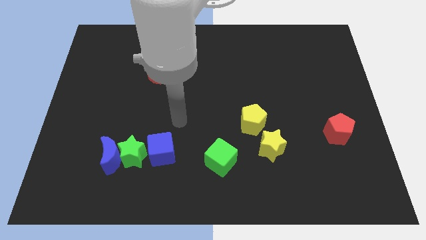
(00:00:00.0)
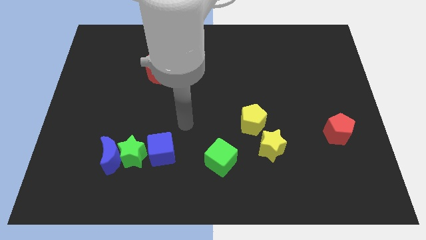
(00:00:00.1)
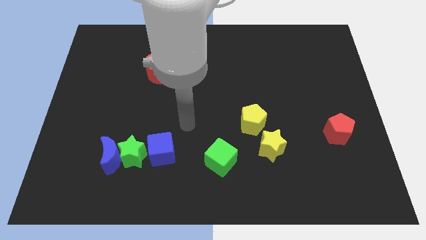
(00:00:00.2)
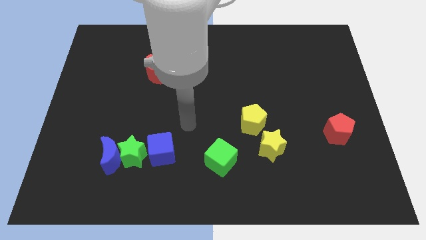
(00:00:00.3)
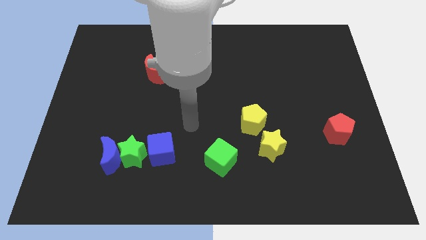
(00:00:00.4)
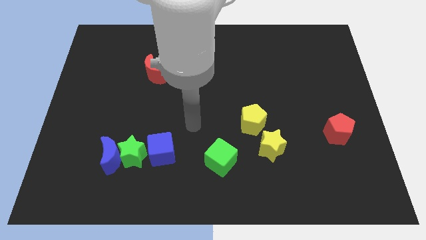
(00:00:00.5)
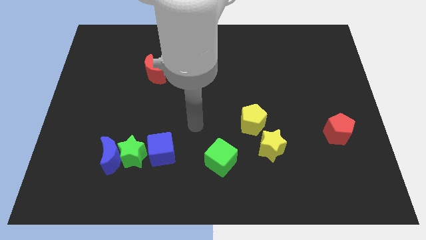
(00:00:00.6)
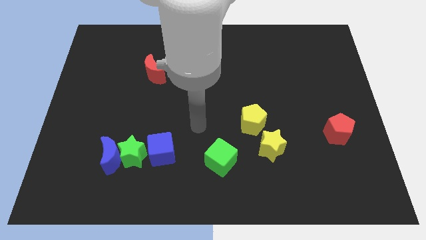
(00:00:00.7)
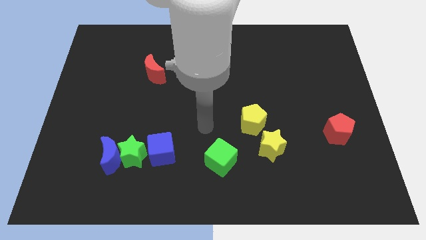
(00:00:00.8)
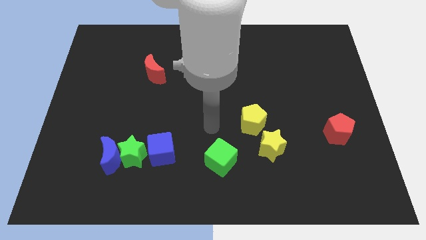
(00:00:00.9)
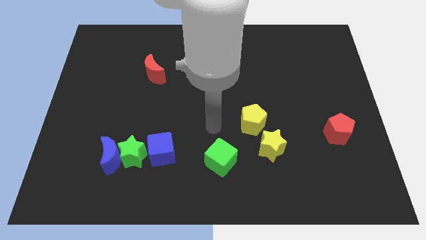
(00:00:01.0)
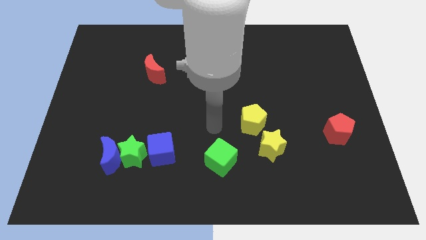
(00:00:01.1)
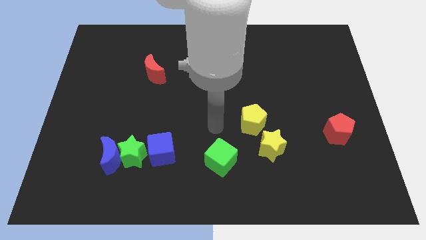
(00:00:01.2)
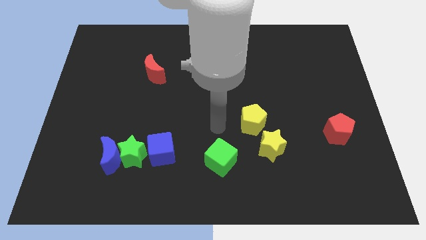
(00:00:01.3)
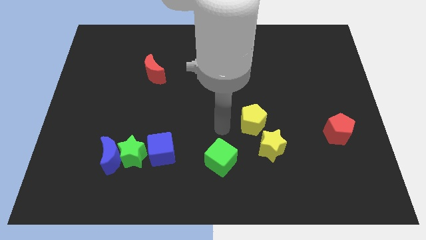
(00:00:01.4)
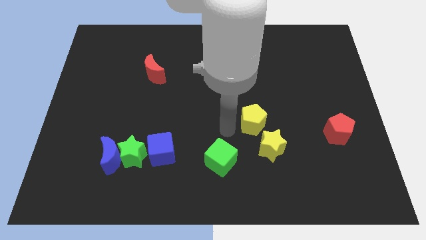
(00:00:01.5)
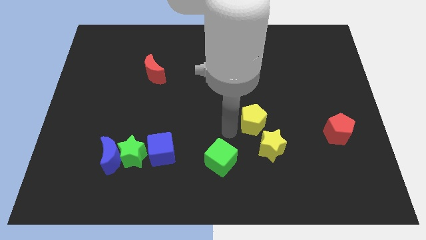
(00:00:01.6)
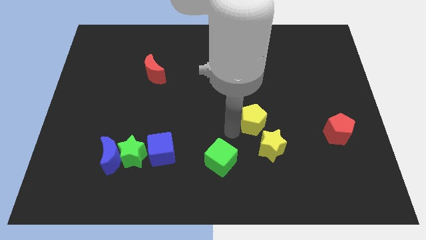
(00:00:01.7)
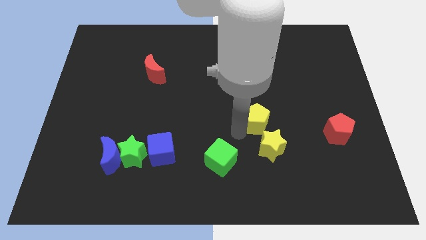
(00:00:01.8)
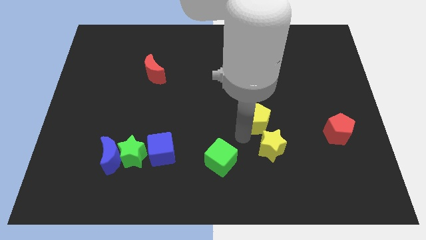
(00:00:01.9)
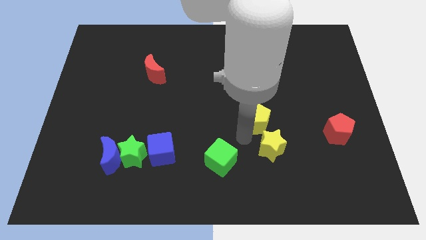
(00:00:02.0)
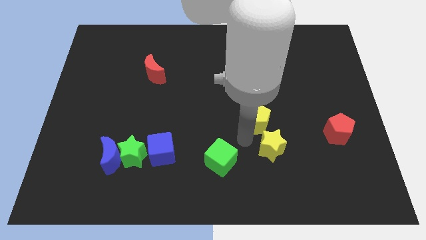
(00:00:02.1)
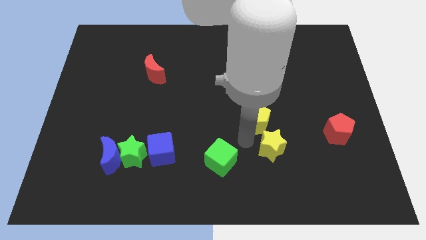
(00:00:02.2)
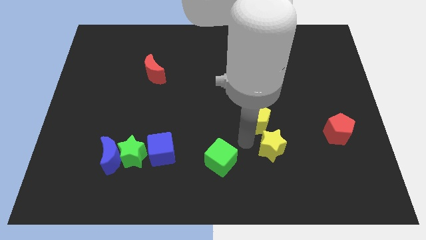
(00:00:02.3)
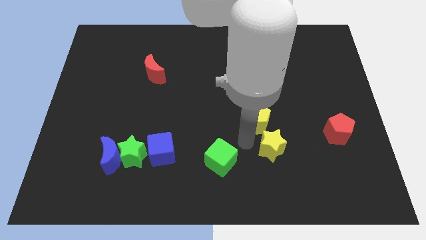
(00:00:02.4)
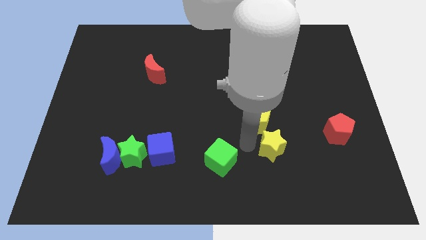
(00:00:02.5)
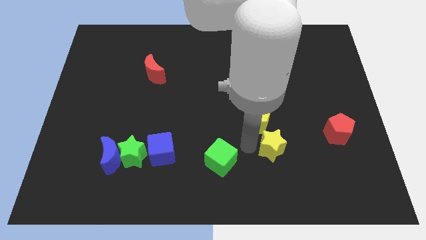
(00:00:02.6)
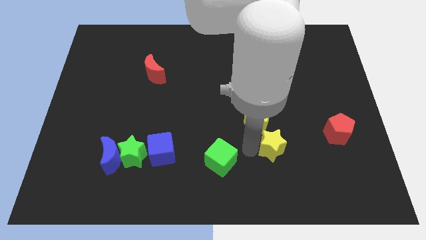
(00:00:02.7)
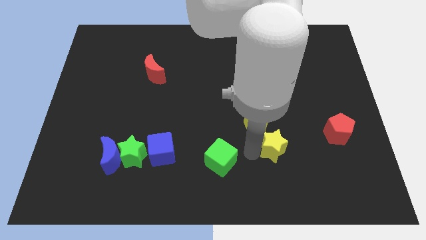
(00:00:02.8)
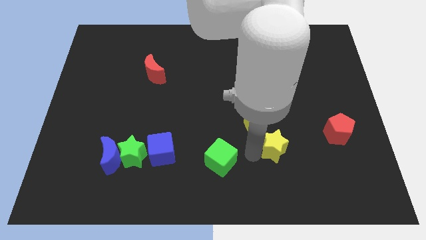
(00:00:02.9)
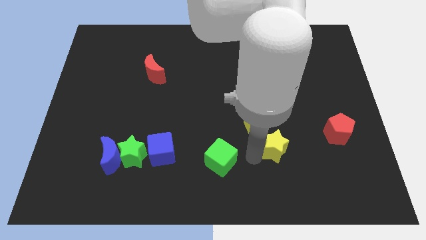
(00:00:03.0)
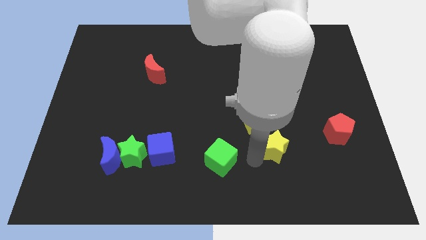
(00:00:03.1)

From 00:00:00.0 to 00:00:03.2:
point your arm towards the bottom left side of the yellow star

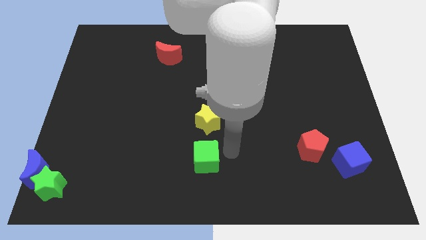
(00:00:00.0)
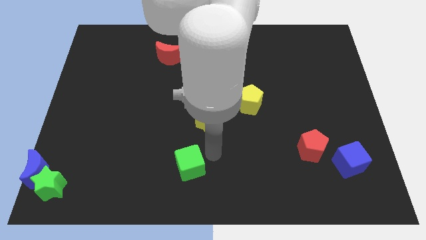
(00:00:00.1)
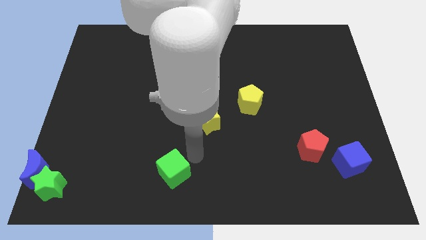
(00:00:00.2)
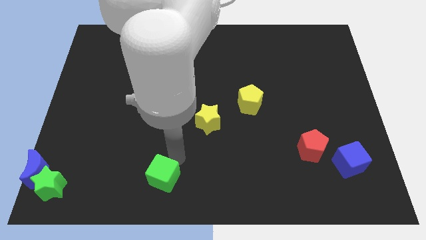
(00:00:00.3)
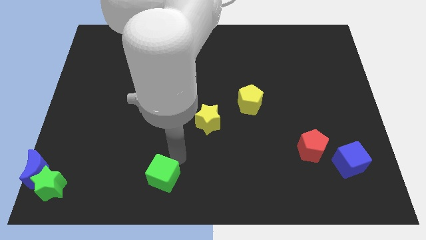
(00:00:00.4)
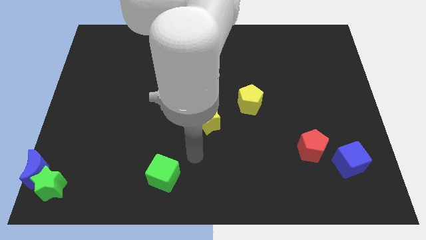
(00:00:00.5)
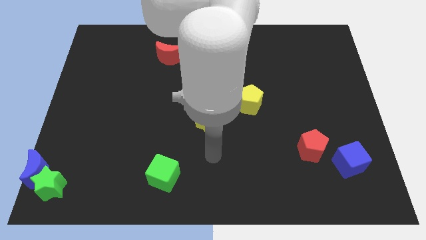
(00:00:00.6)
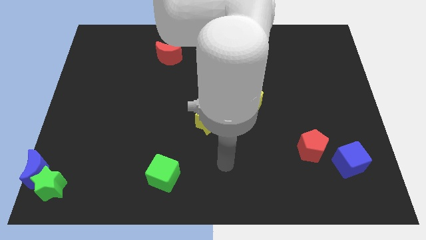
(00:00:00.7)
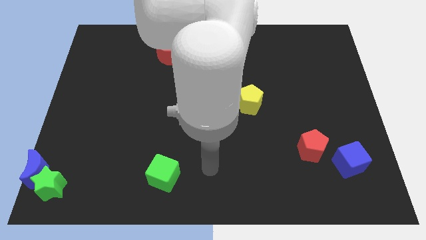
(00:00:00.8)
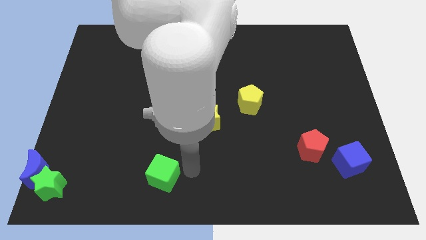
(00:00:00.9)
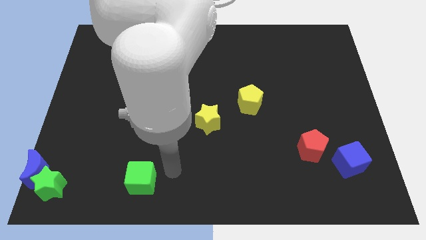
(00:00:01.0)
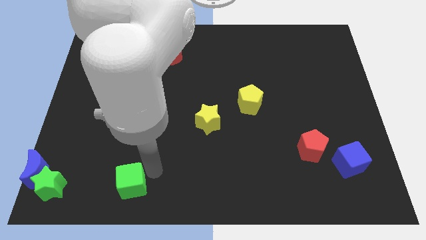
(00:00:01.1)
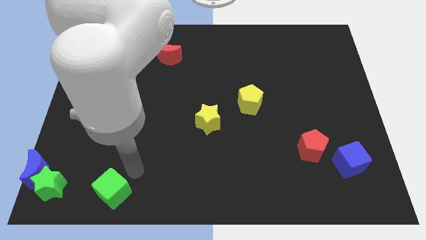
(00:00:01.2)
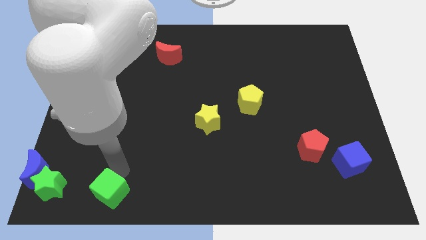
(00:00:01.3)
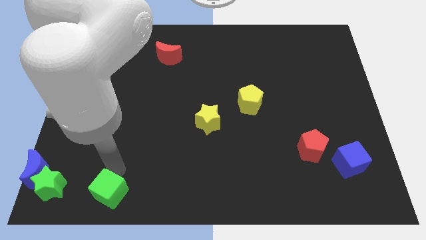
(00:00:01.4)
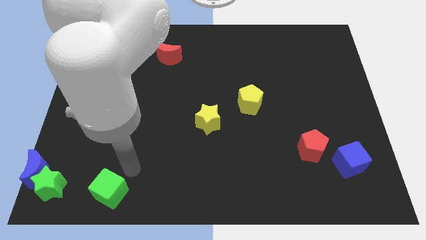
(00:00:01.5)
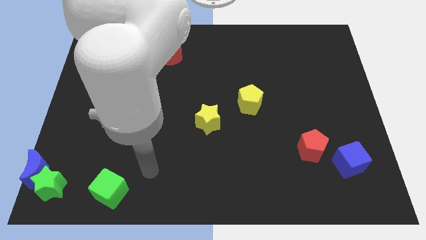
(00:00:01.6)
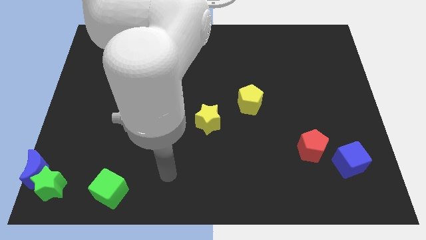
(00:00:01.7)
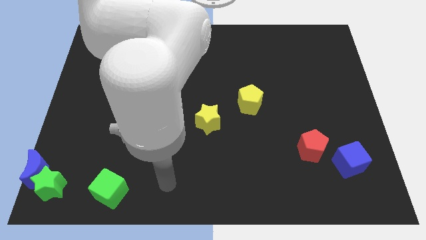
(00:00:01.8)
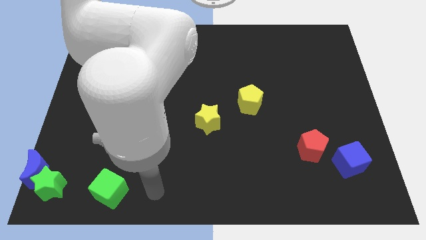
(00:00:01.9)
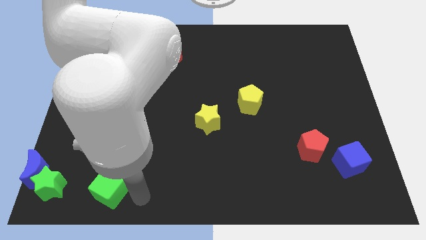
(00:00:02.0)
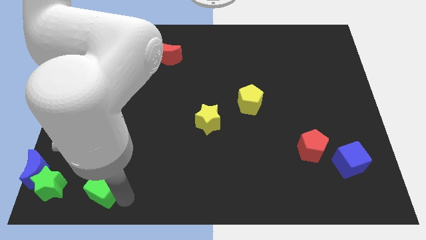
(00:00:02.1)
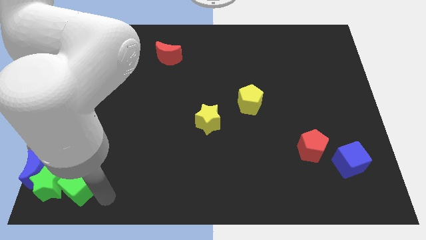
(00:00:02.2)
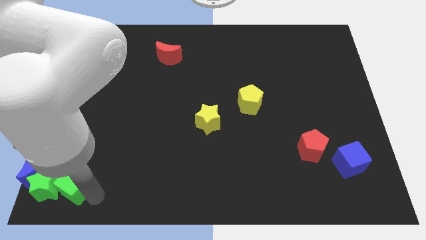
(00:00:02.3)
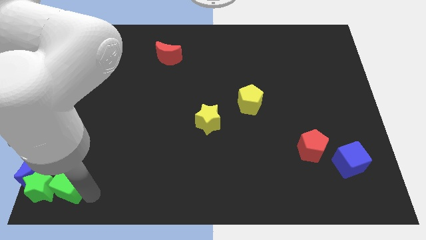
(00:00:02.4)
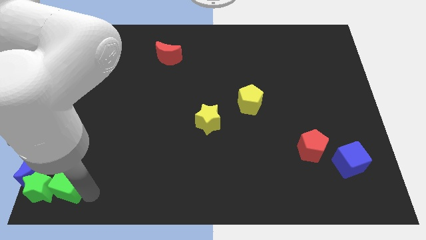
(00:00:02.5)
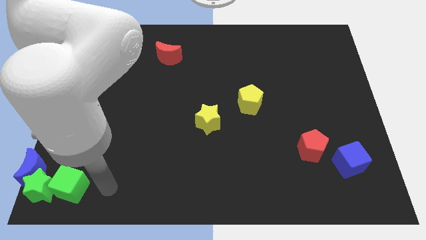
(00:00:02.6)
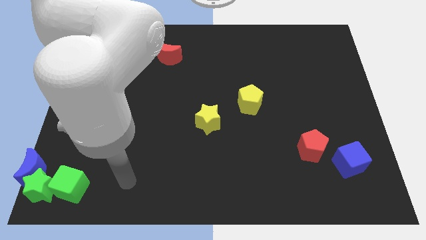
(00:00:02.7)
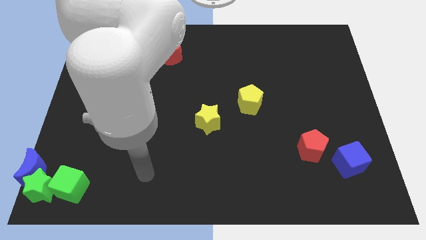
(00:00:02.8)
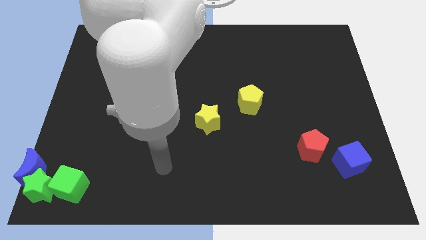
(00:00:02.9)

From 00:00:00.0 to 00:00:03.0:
push the green cube into green star

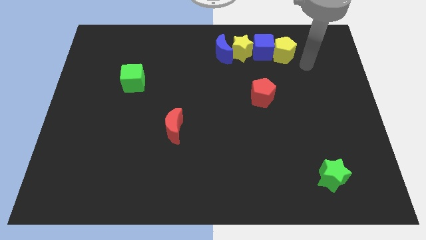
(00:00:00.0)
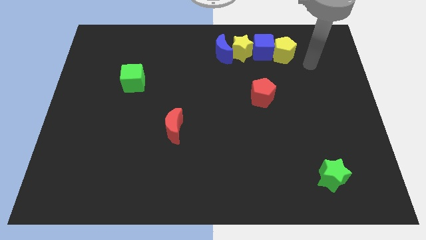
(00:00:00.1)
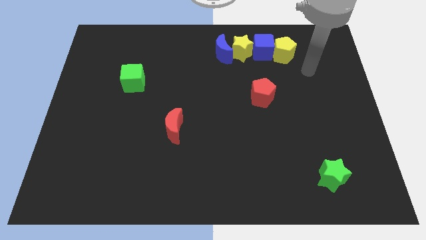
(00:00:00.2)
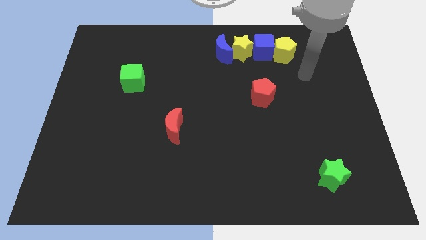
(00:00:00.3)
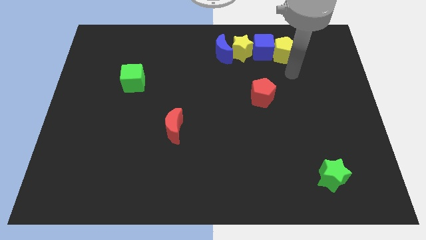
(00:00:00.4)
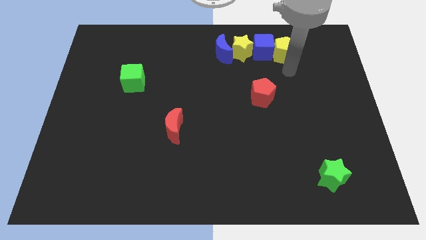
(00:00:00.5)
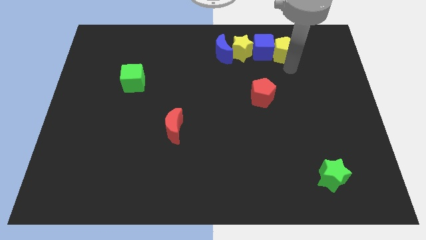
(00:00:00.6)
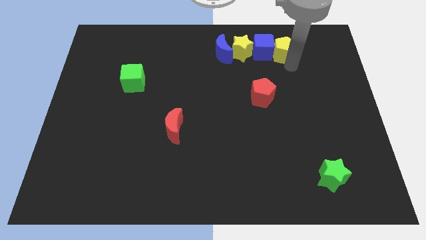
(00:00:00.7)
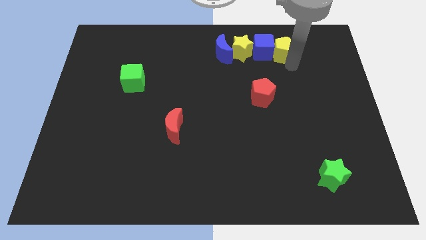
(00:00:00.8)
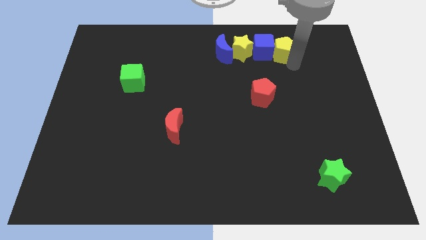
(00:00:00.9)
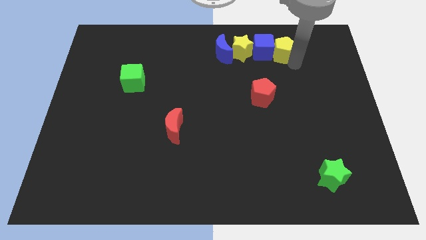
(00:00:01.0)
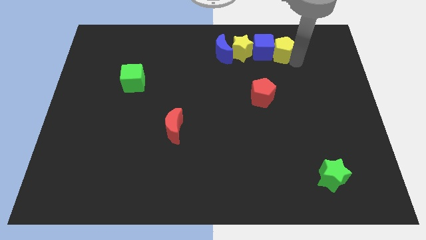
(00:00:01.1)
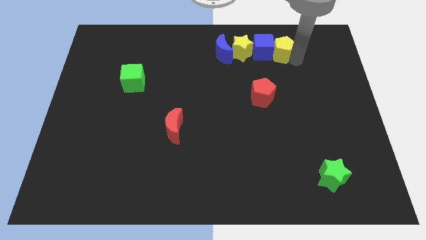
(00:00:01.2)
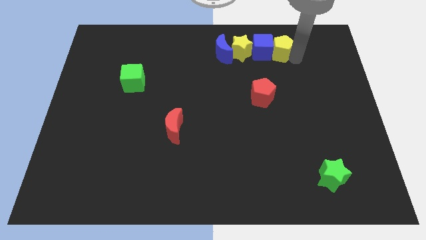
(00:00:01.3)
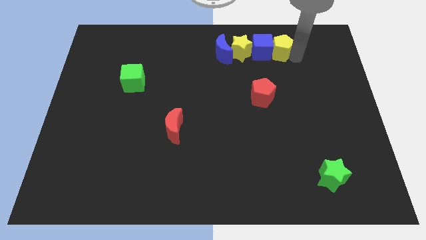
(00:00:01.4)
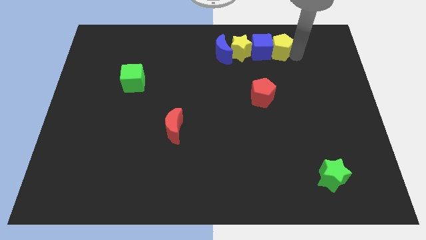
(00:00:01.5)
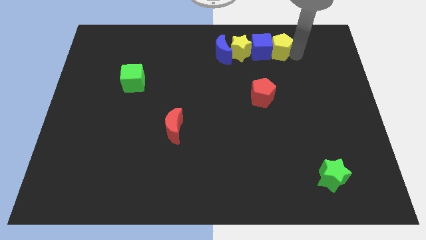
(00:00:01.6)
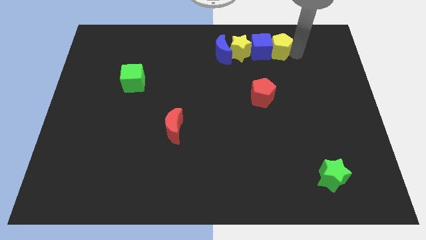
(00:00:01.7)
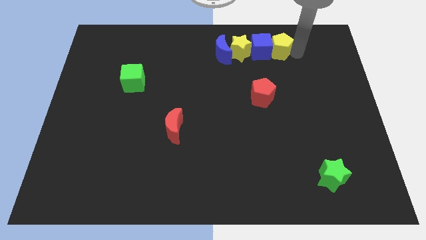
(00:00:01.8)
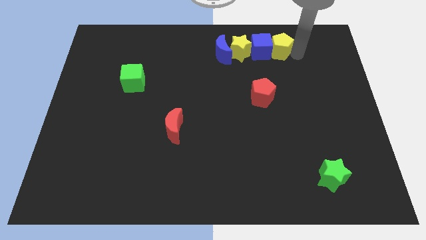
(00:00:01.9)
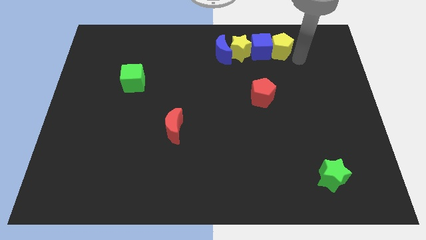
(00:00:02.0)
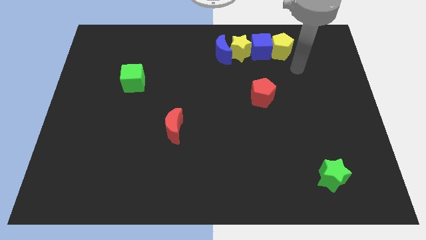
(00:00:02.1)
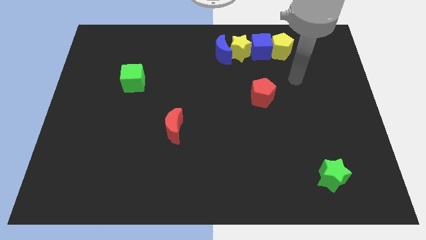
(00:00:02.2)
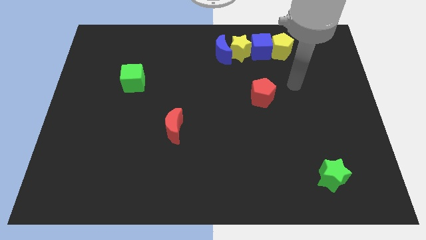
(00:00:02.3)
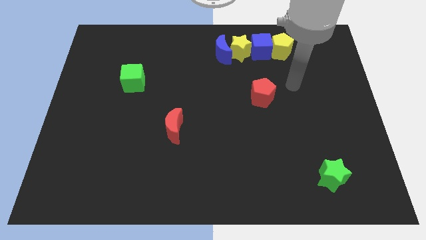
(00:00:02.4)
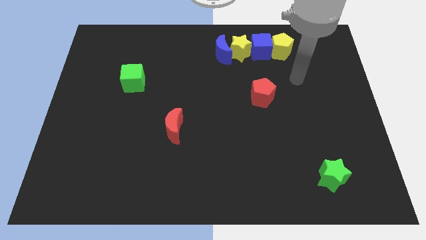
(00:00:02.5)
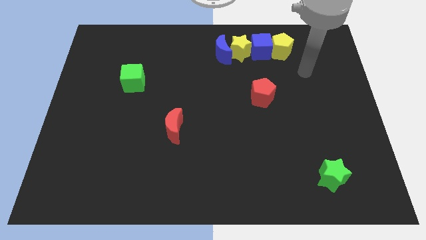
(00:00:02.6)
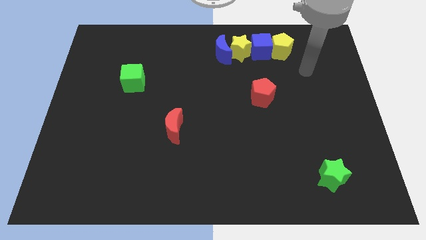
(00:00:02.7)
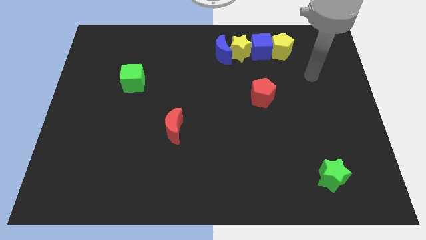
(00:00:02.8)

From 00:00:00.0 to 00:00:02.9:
push the yellow pentagon close to the right side of the blue cube
